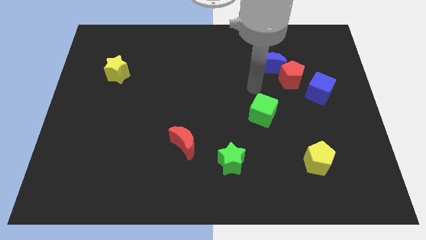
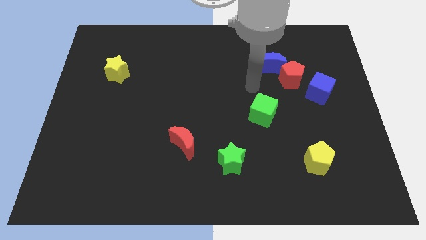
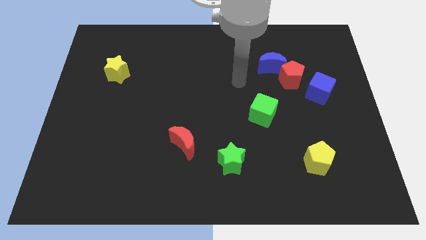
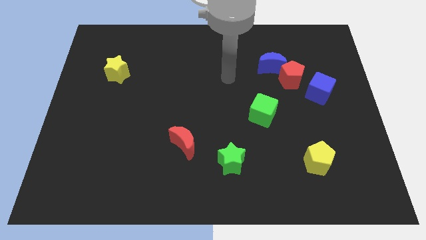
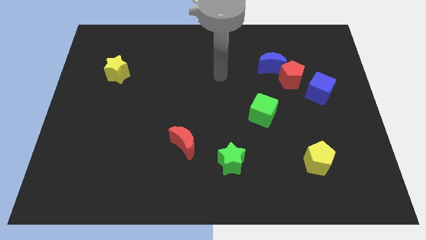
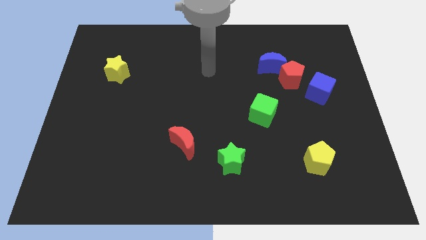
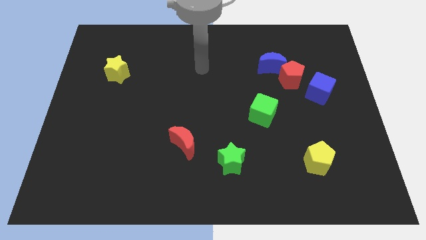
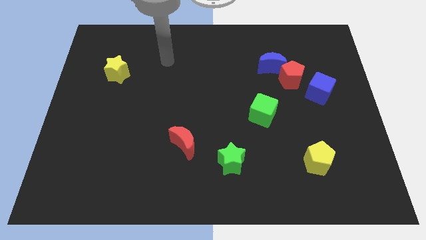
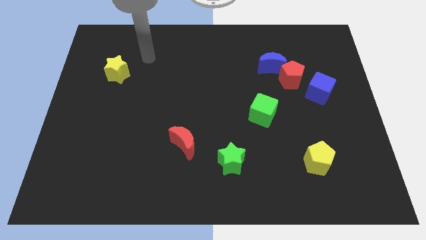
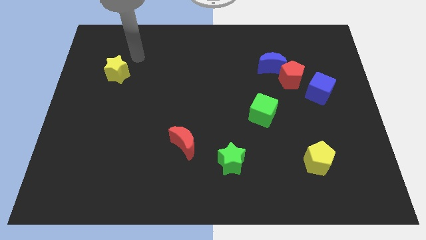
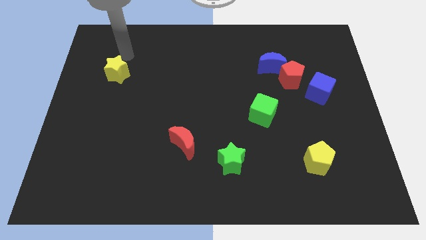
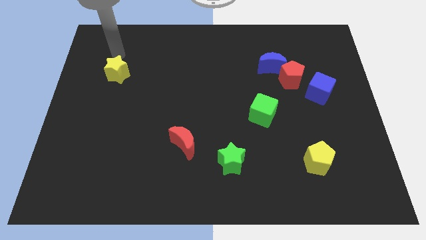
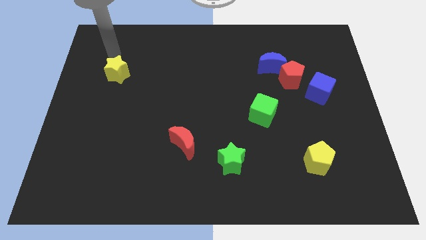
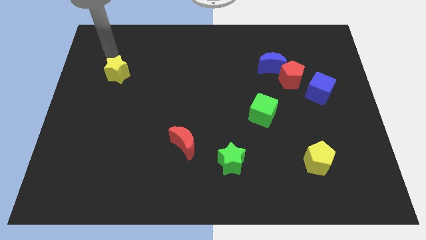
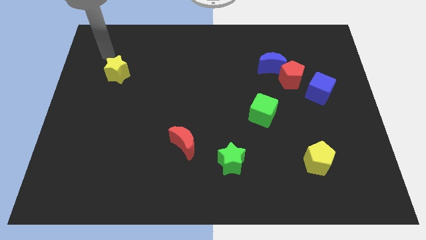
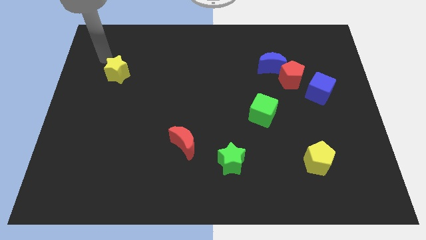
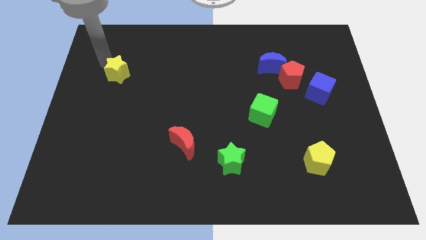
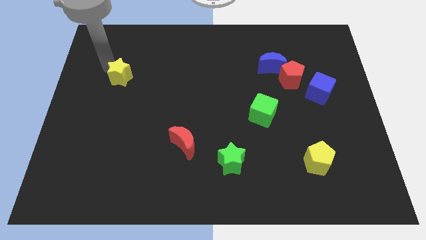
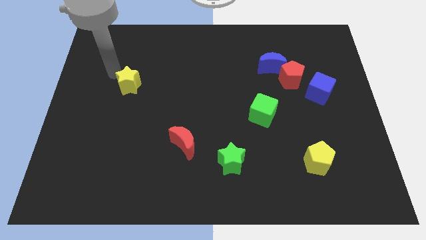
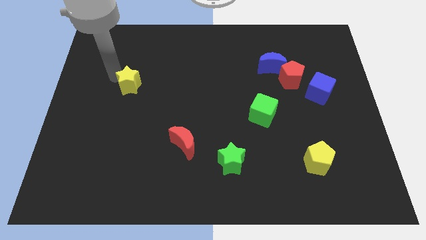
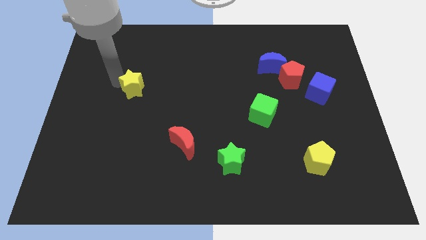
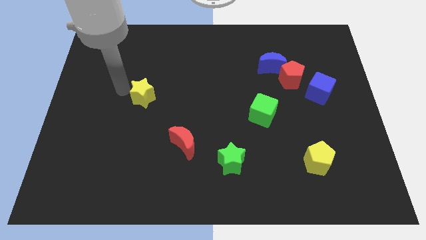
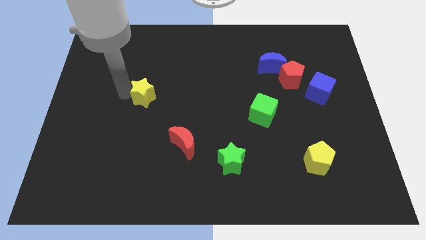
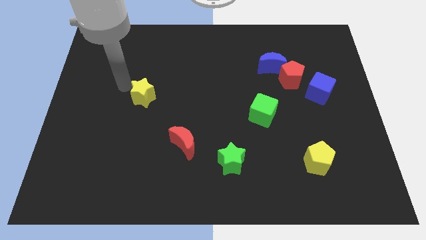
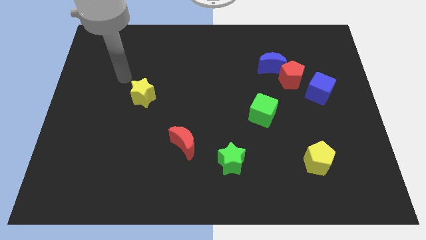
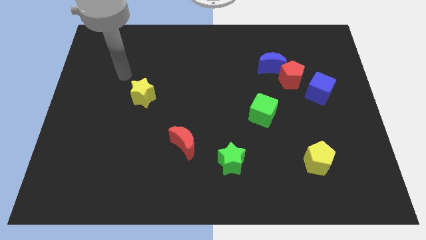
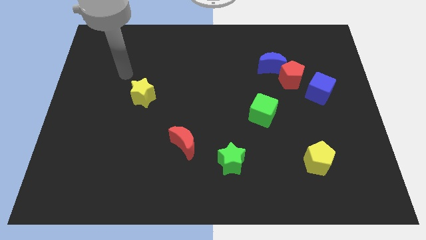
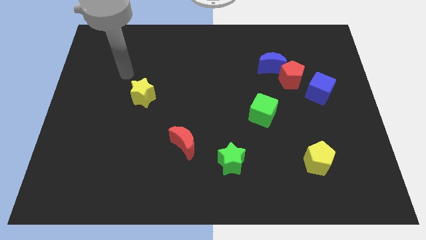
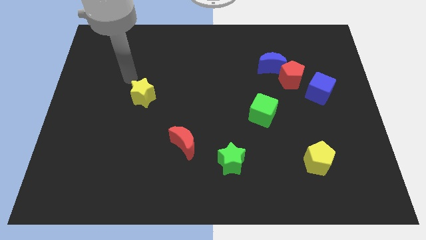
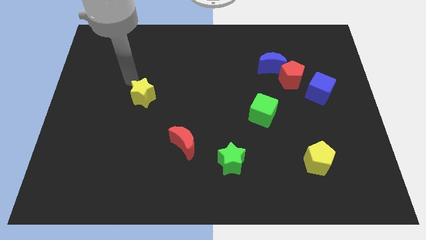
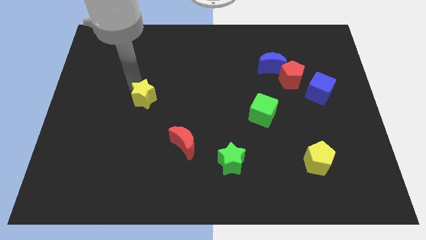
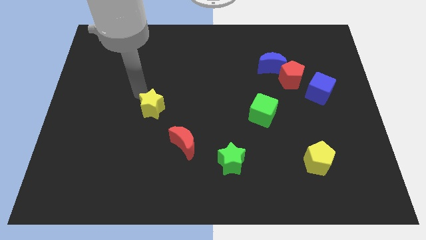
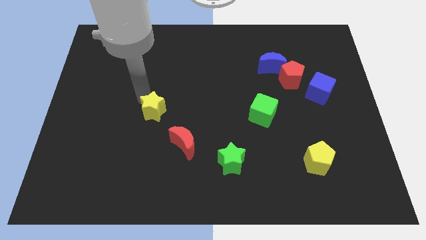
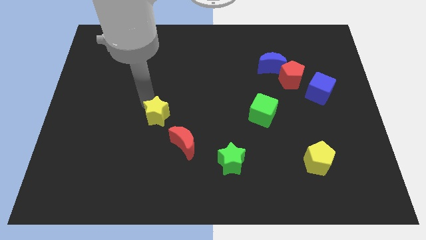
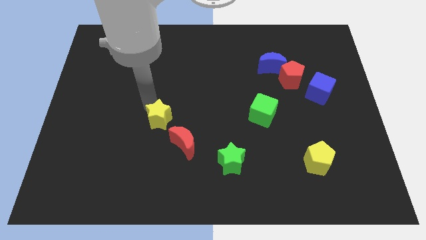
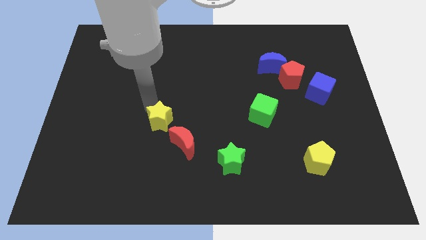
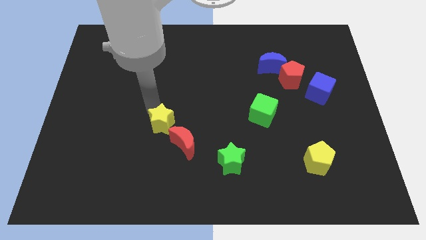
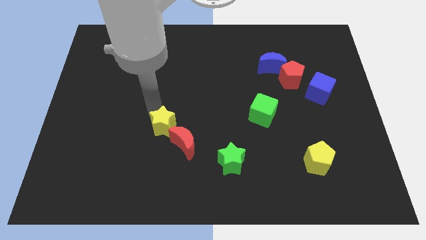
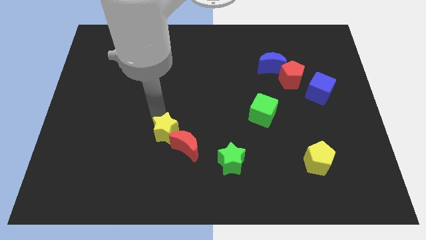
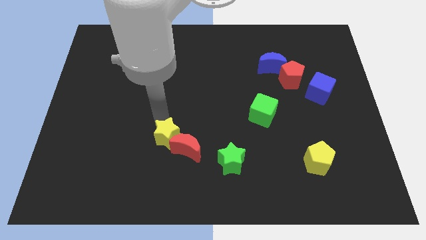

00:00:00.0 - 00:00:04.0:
push the yellow star towards the red moon

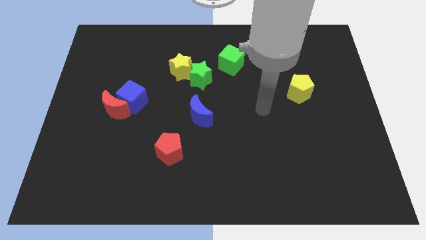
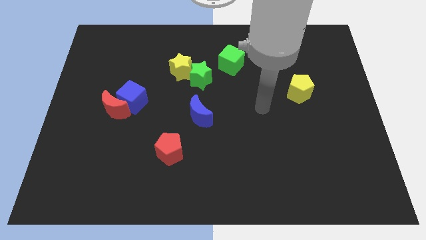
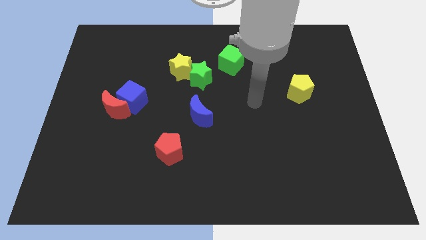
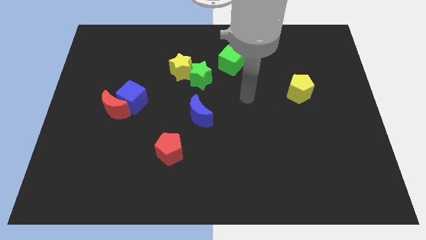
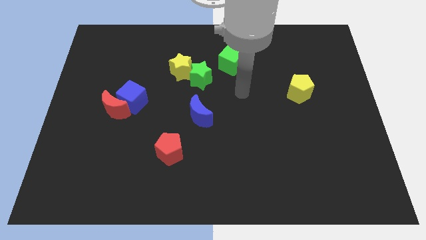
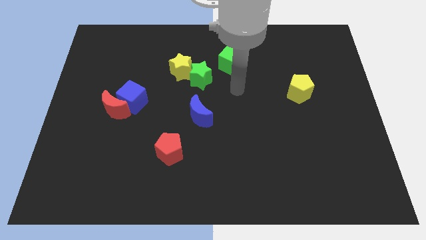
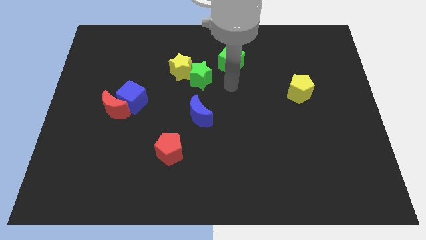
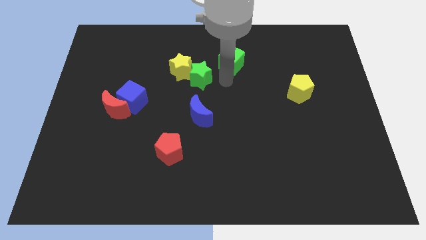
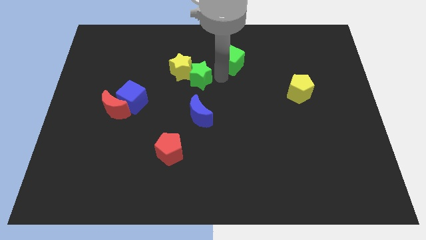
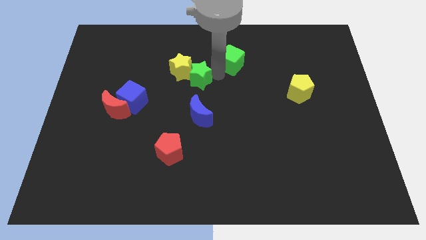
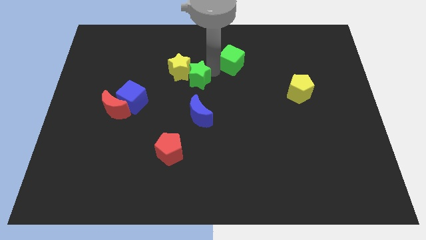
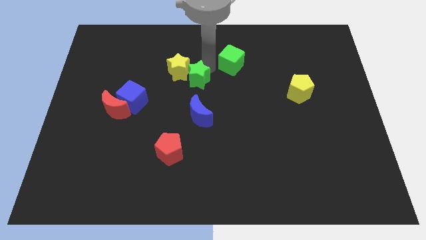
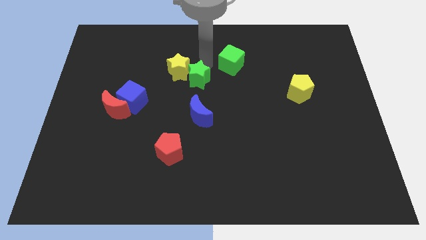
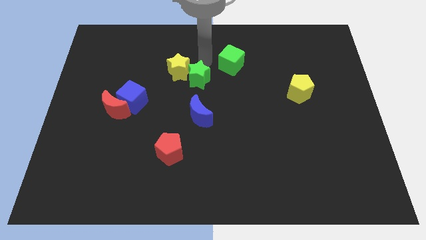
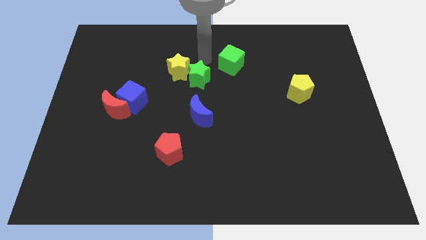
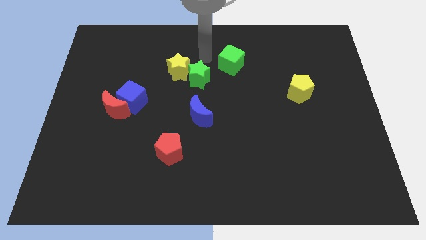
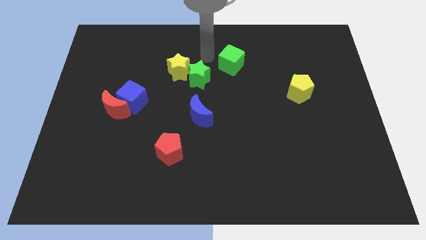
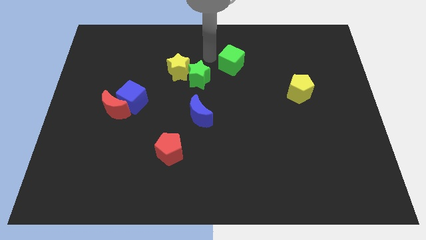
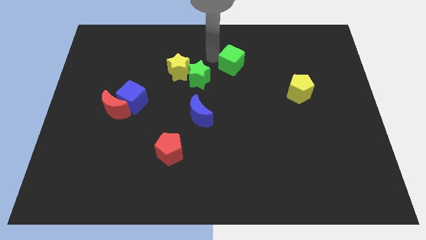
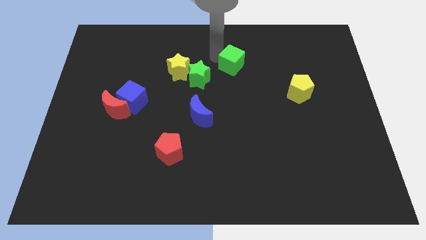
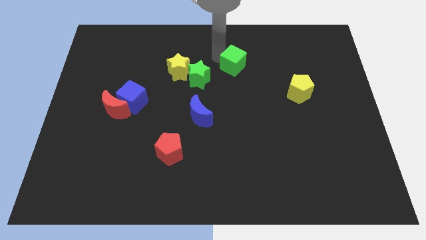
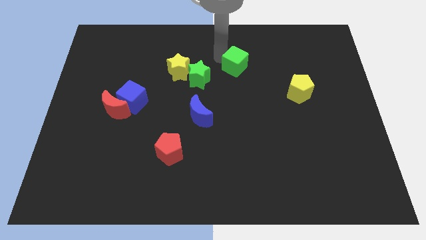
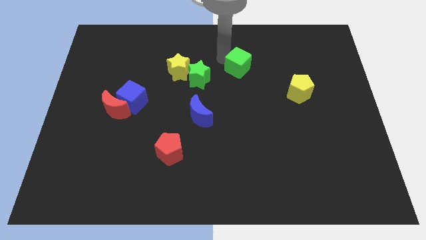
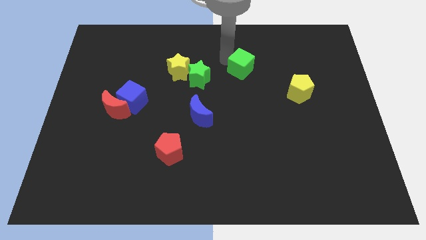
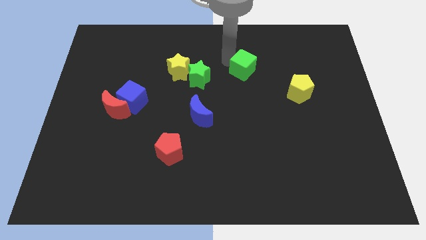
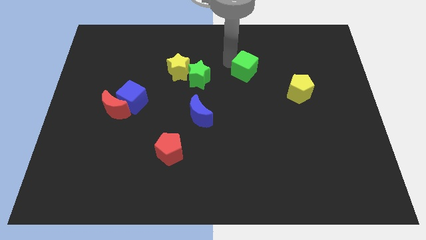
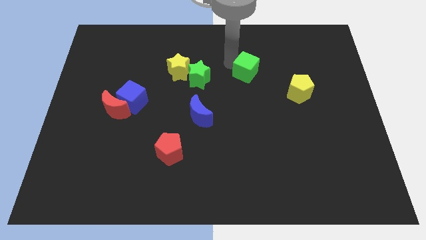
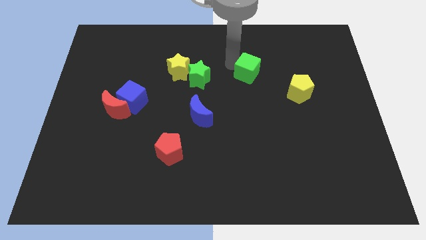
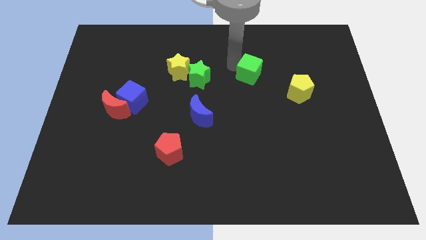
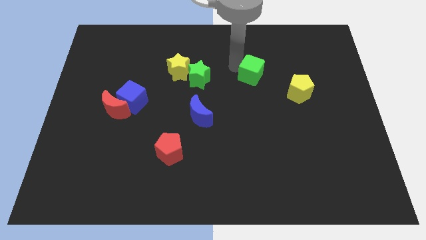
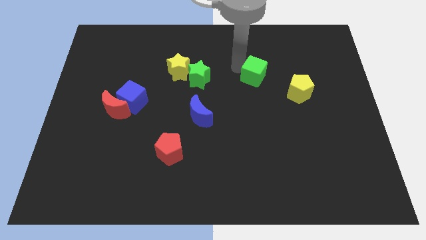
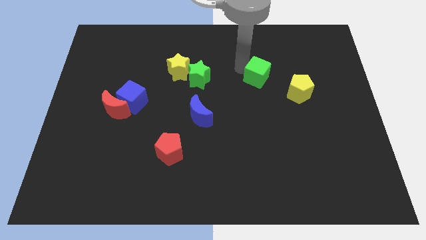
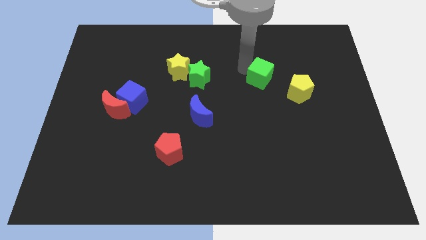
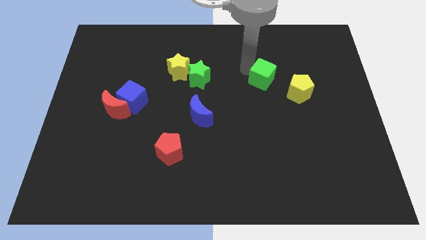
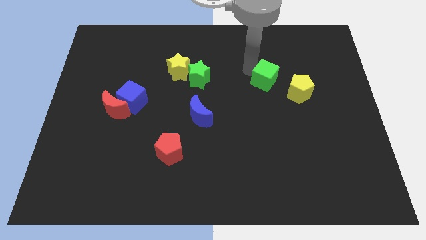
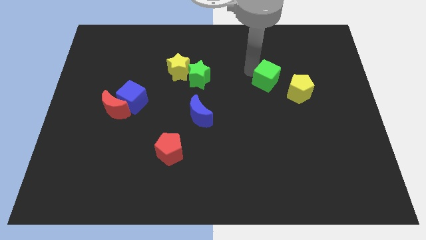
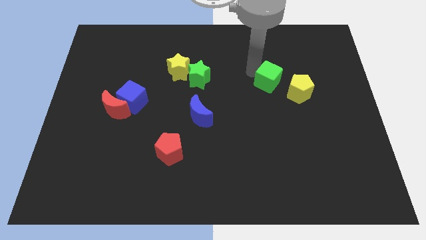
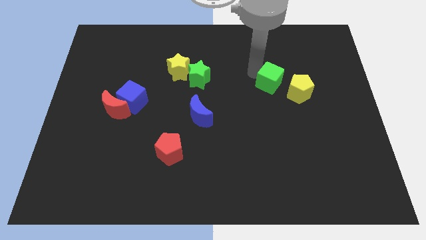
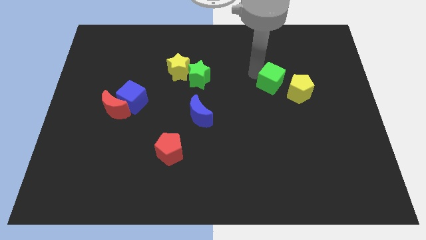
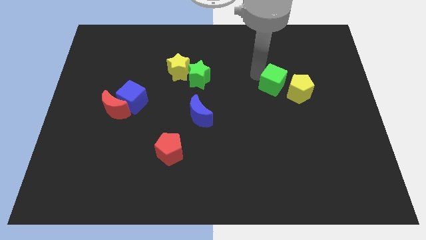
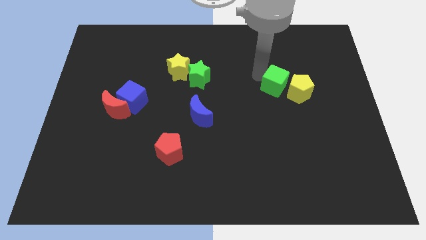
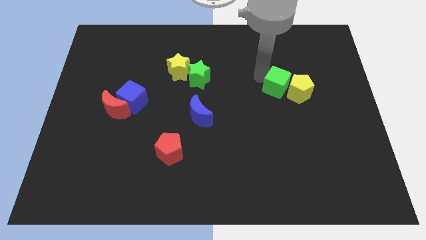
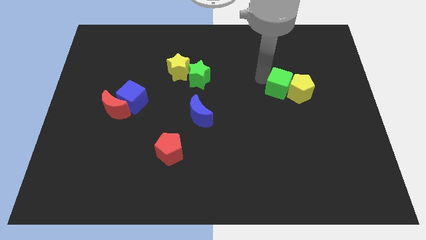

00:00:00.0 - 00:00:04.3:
put the green cube next to the yellow pentagon
